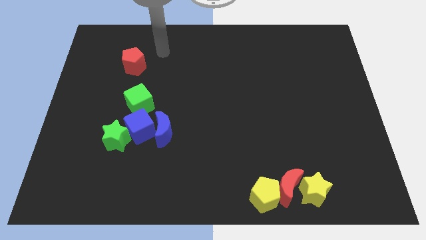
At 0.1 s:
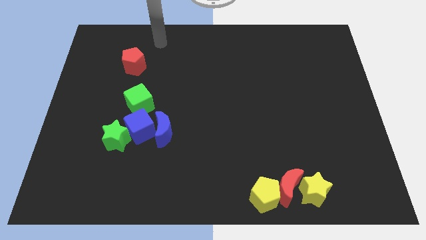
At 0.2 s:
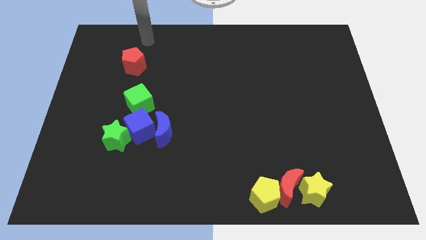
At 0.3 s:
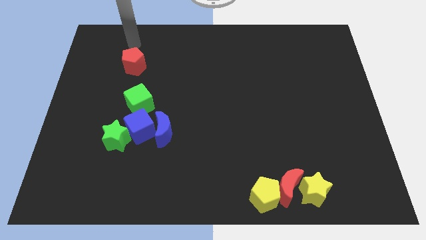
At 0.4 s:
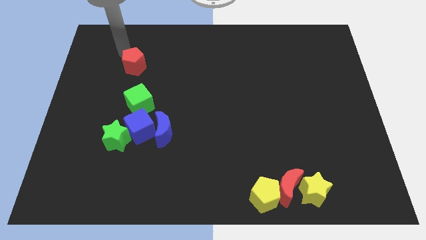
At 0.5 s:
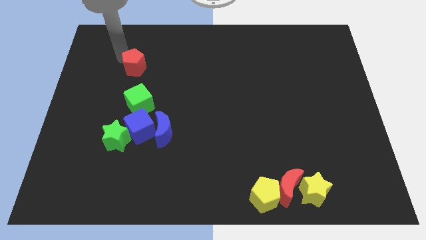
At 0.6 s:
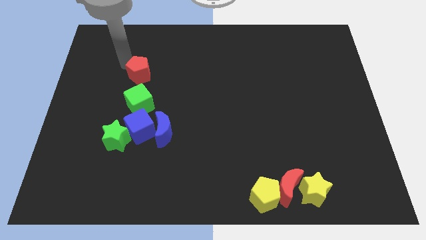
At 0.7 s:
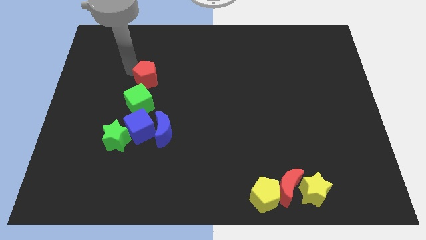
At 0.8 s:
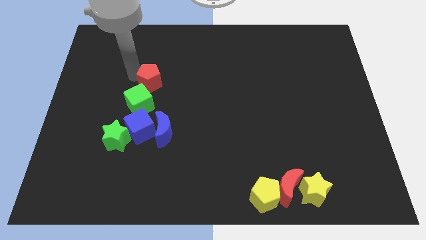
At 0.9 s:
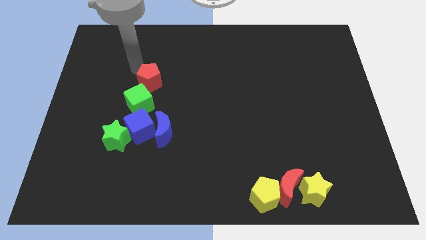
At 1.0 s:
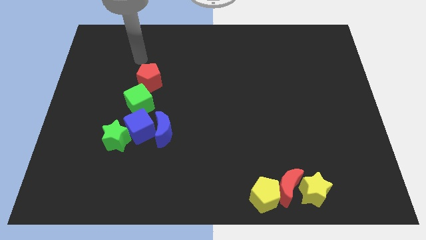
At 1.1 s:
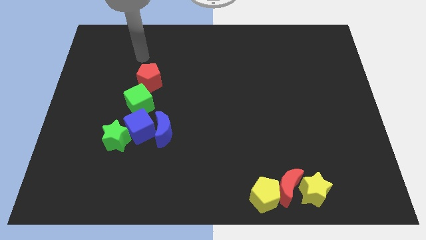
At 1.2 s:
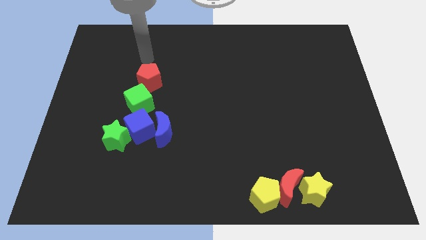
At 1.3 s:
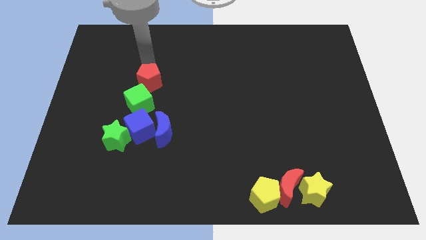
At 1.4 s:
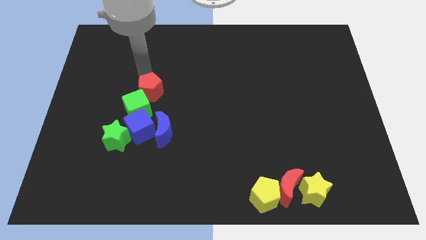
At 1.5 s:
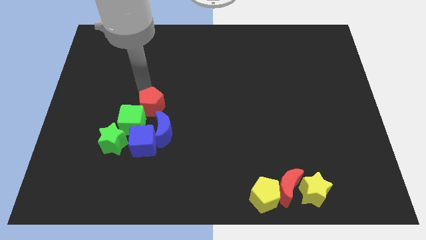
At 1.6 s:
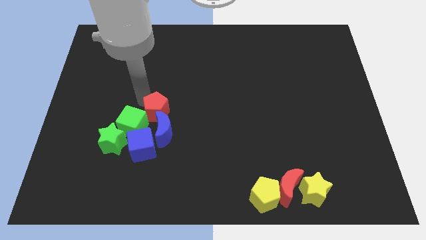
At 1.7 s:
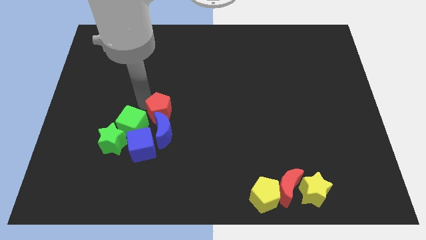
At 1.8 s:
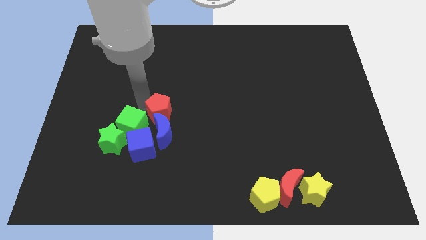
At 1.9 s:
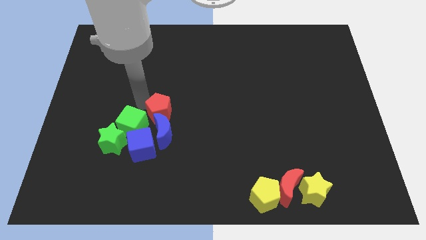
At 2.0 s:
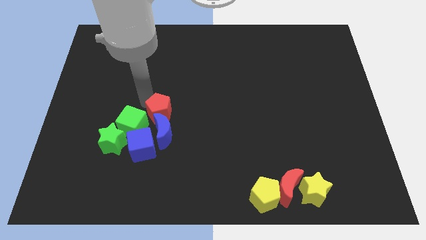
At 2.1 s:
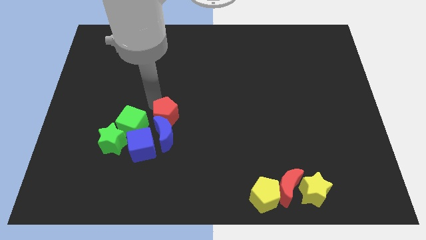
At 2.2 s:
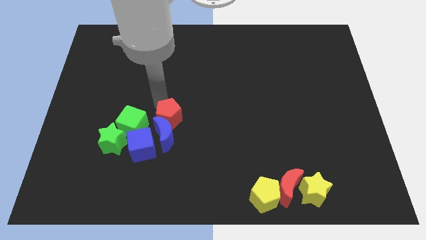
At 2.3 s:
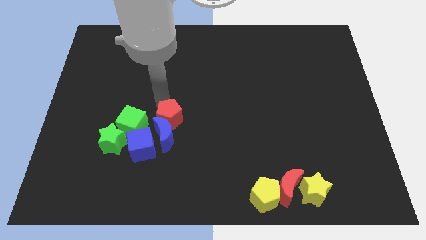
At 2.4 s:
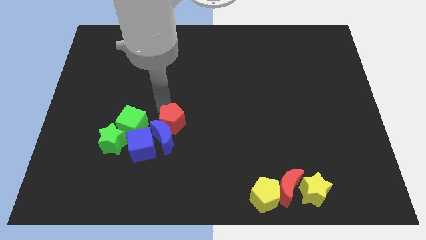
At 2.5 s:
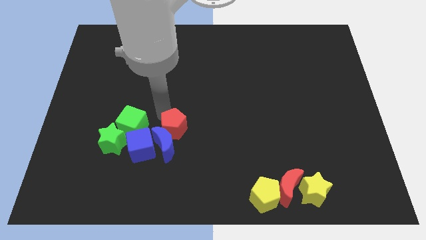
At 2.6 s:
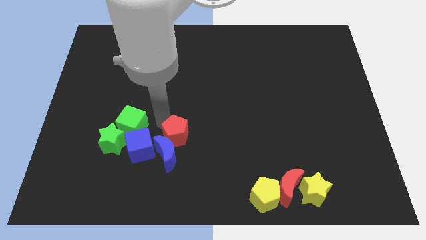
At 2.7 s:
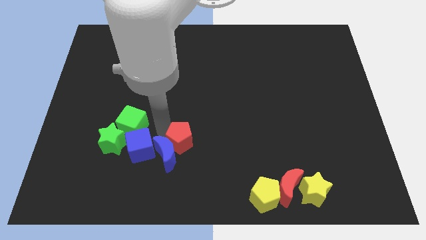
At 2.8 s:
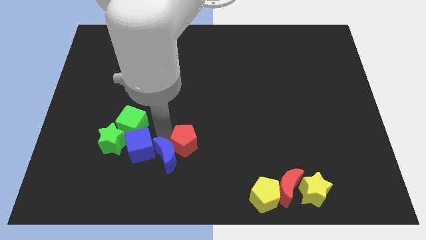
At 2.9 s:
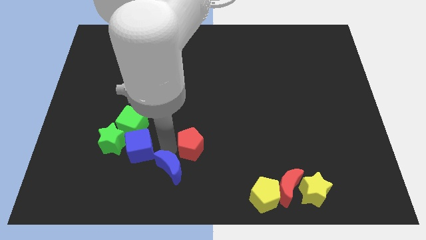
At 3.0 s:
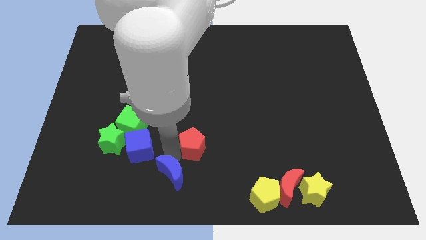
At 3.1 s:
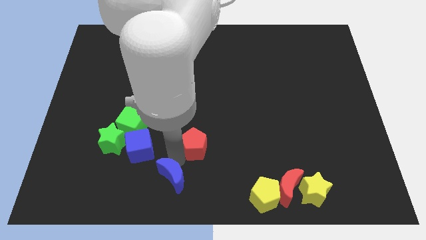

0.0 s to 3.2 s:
place your arm in between blue moon and red pentagon

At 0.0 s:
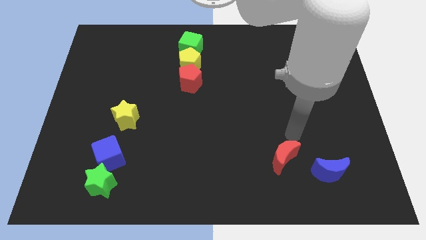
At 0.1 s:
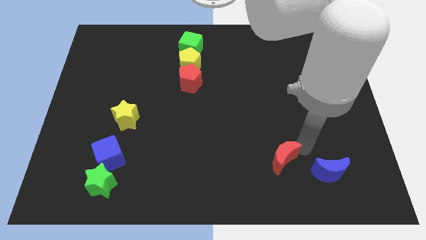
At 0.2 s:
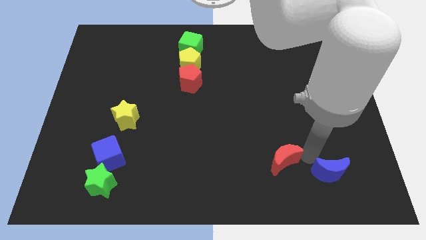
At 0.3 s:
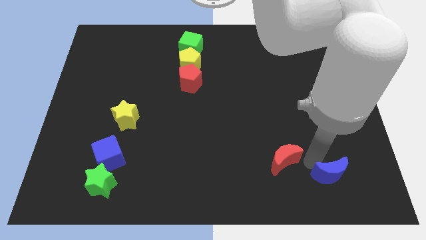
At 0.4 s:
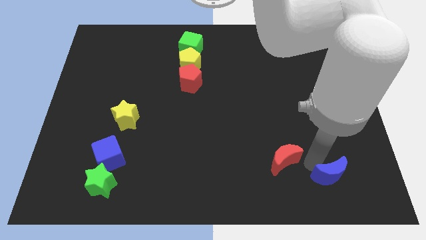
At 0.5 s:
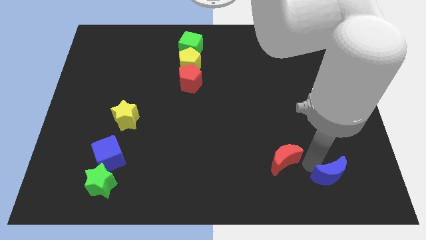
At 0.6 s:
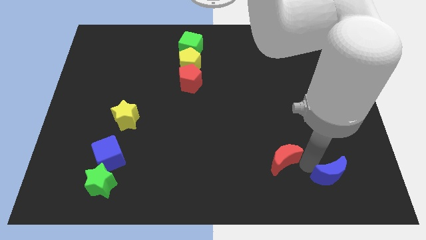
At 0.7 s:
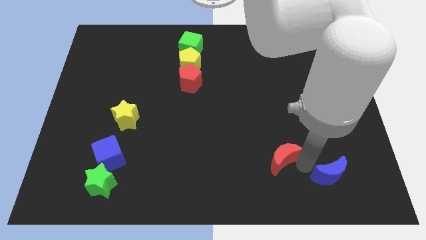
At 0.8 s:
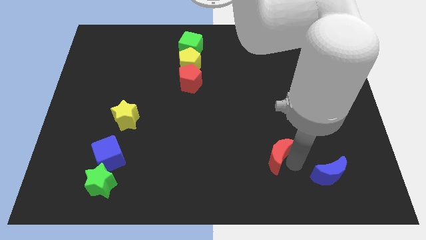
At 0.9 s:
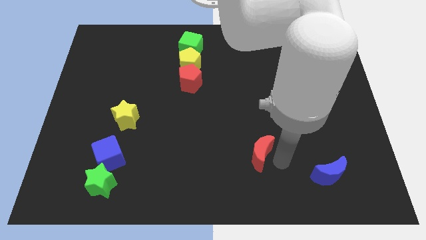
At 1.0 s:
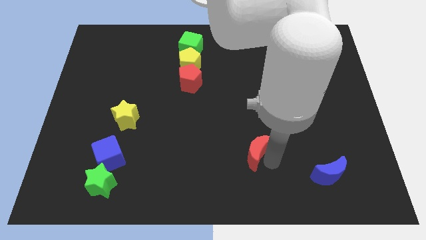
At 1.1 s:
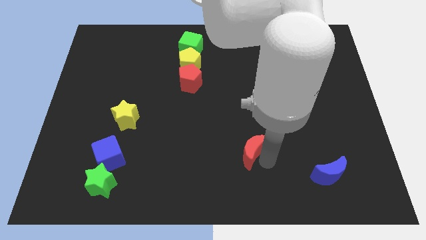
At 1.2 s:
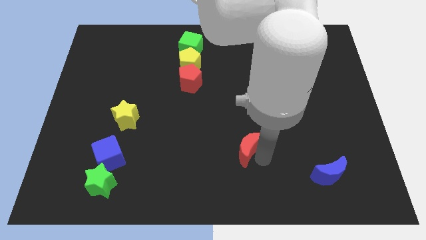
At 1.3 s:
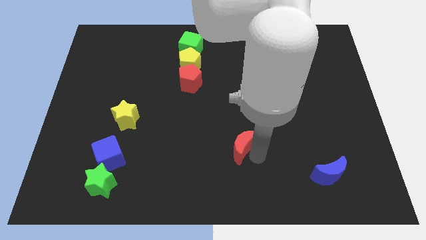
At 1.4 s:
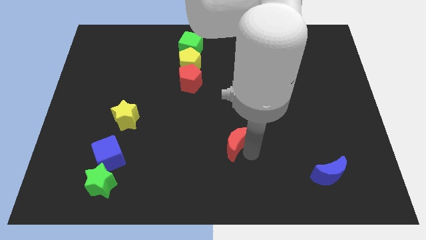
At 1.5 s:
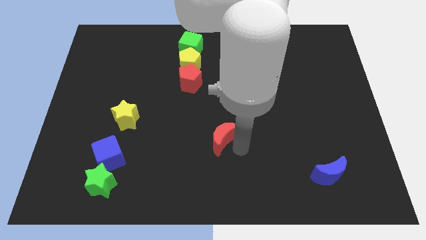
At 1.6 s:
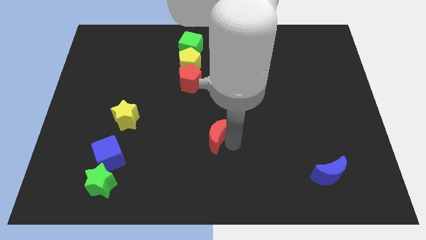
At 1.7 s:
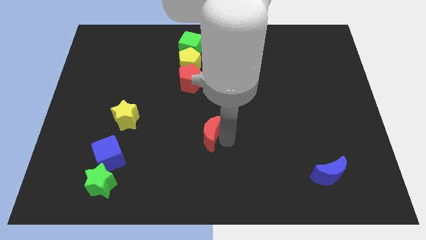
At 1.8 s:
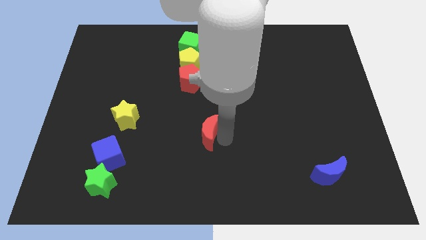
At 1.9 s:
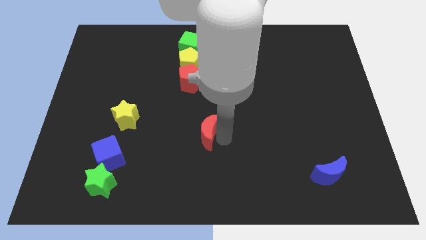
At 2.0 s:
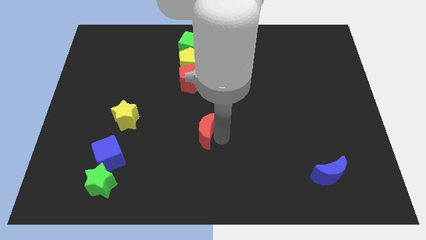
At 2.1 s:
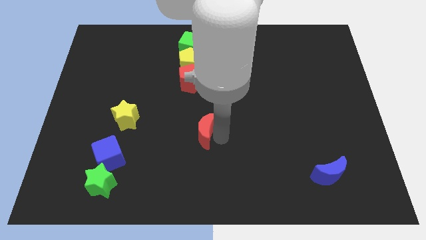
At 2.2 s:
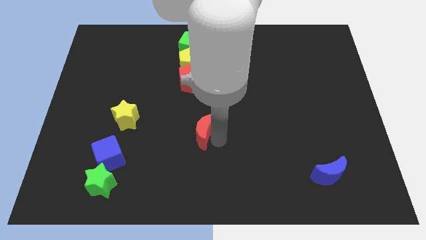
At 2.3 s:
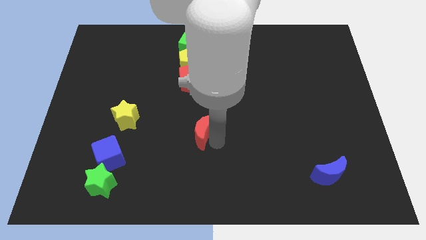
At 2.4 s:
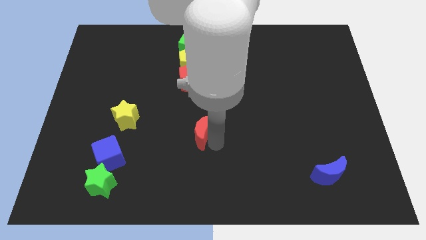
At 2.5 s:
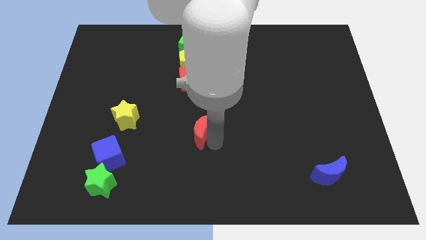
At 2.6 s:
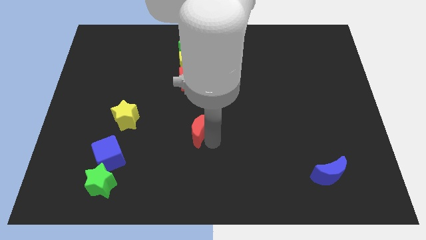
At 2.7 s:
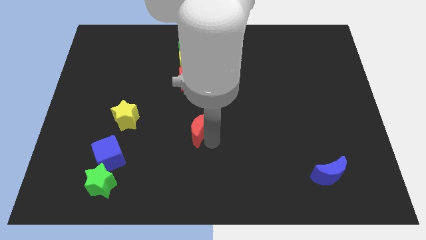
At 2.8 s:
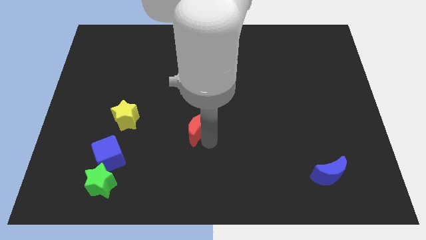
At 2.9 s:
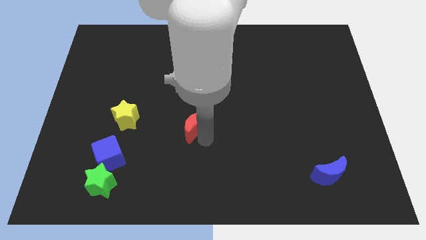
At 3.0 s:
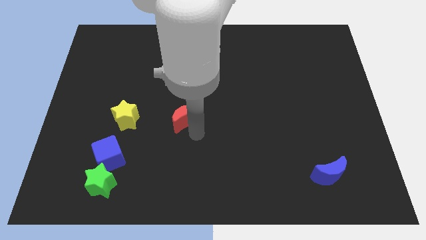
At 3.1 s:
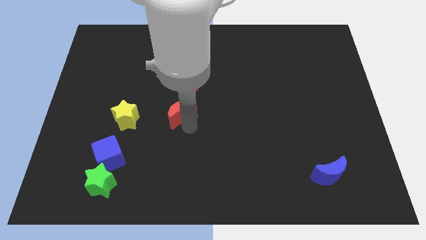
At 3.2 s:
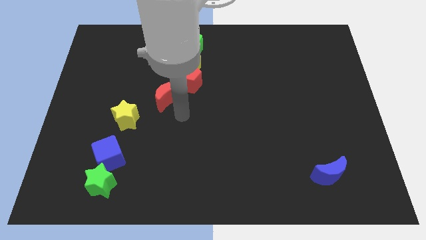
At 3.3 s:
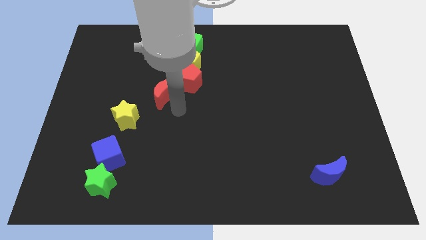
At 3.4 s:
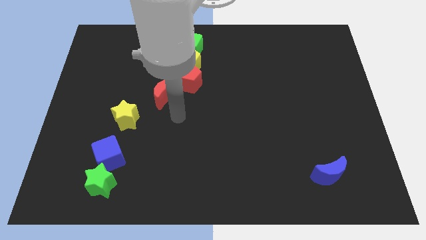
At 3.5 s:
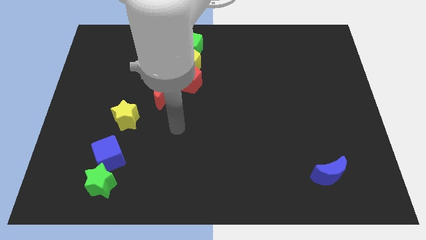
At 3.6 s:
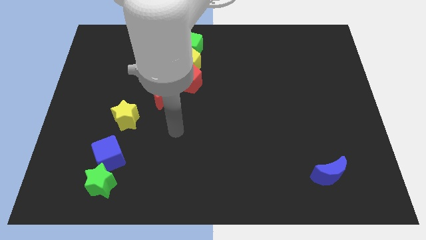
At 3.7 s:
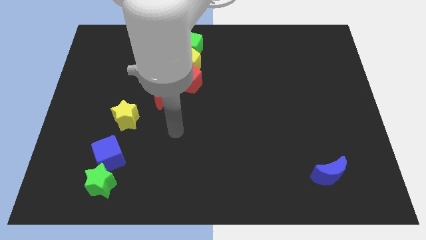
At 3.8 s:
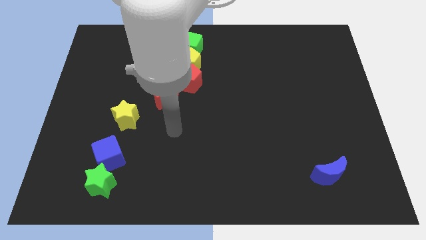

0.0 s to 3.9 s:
move the red moon near the red pentagon

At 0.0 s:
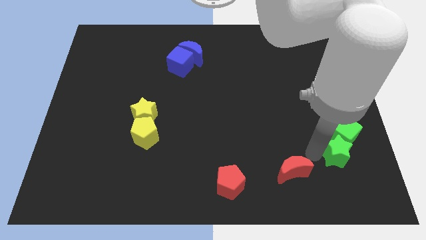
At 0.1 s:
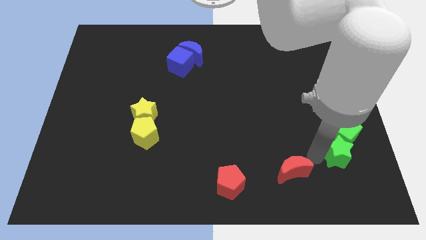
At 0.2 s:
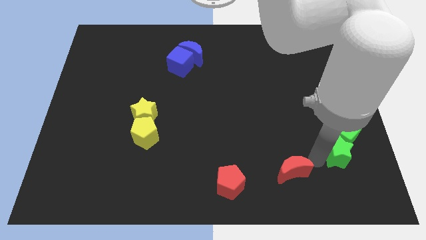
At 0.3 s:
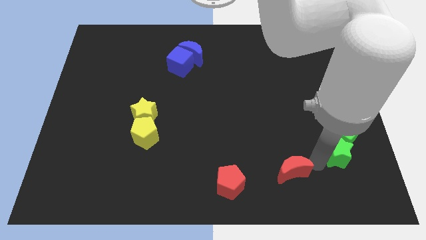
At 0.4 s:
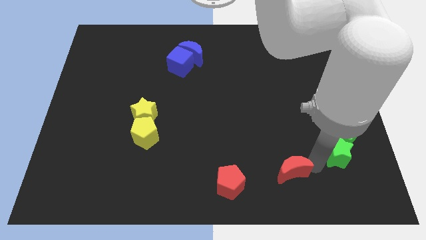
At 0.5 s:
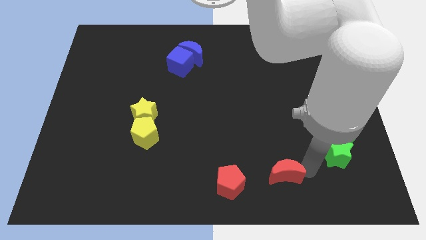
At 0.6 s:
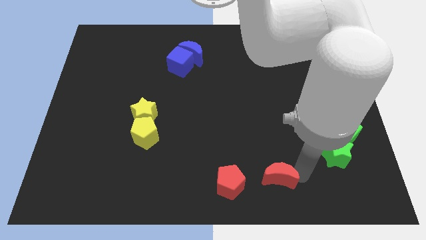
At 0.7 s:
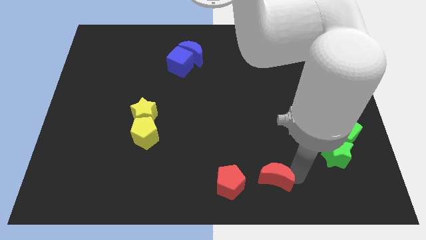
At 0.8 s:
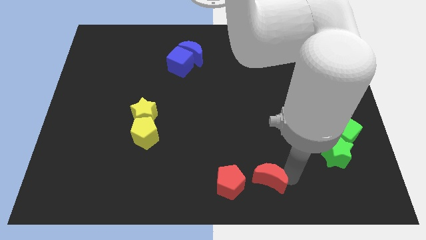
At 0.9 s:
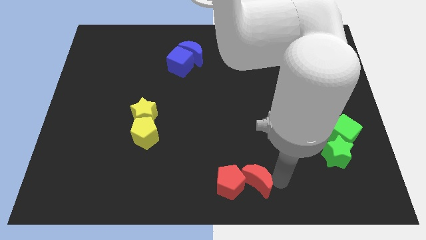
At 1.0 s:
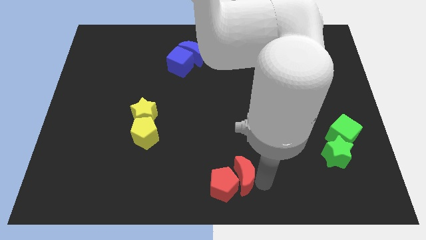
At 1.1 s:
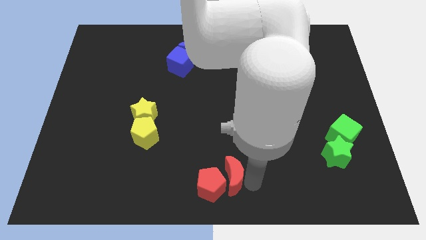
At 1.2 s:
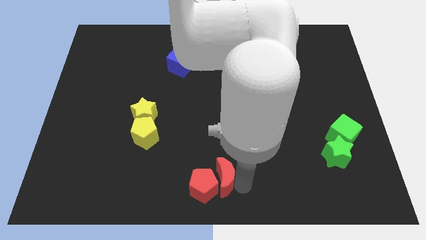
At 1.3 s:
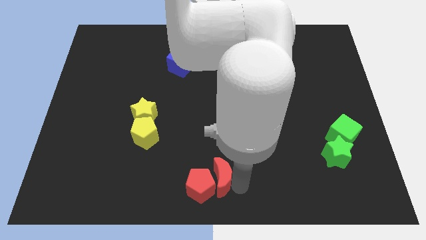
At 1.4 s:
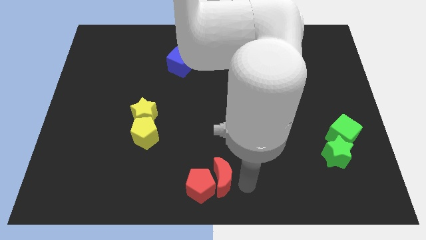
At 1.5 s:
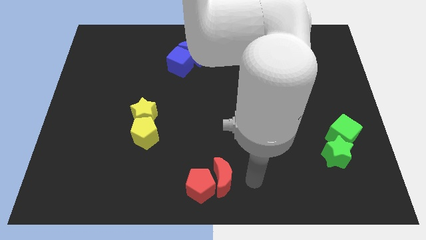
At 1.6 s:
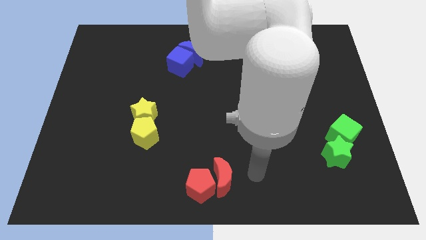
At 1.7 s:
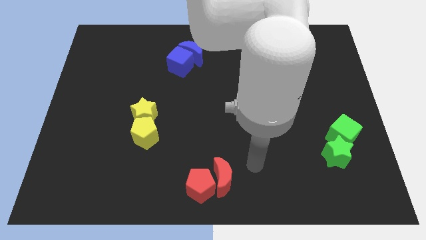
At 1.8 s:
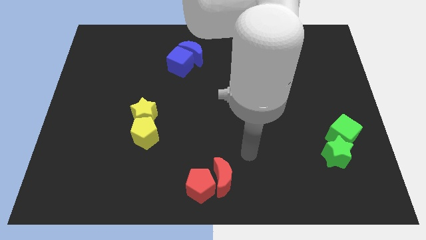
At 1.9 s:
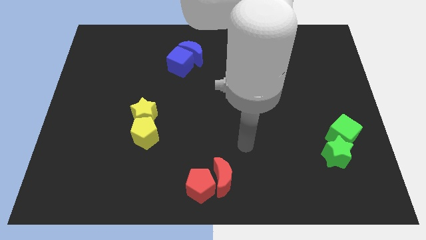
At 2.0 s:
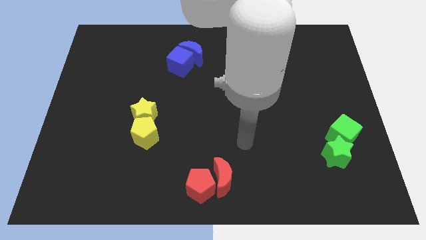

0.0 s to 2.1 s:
move the red crescent near to the red pentagon
